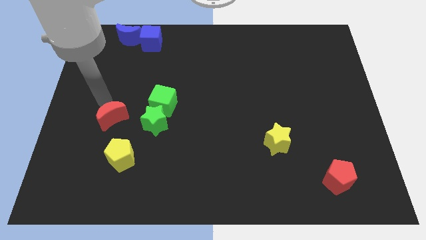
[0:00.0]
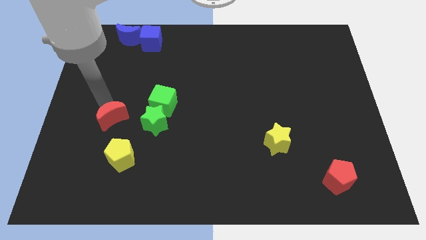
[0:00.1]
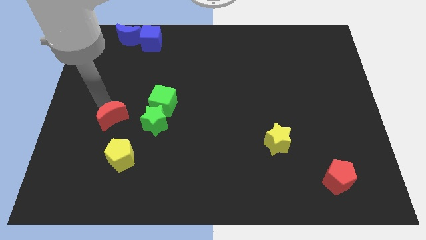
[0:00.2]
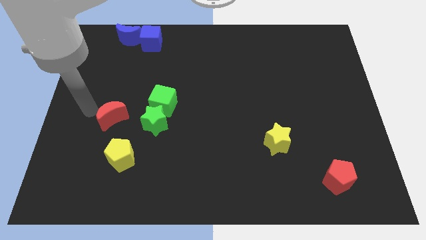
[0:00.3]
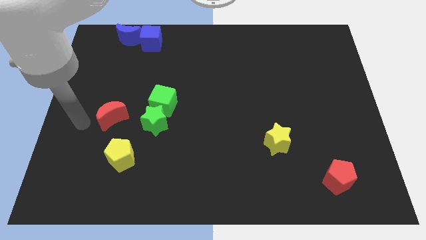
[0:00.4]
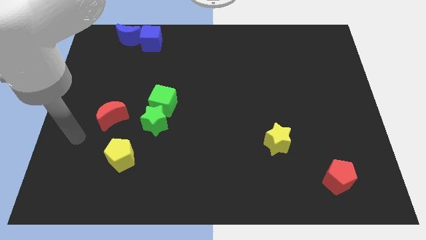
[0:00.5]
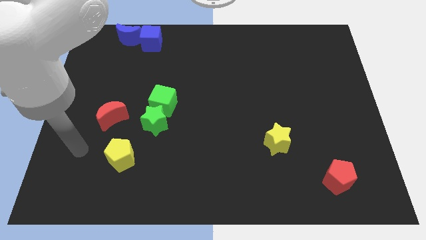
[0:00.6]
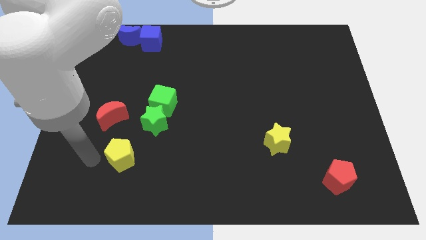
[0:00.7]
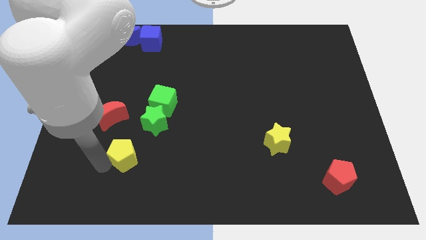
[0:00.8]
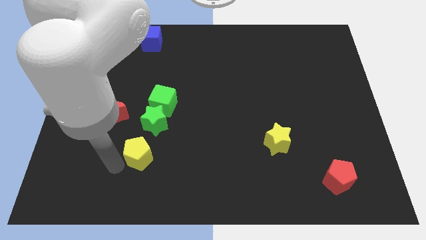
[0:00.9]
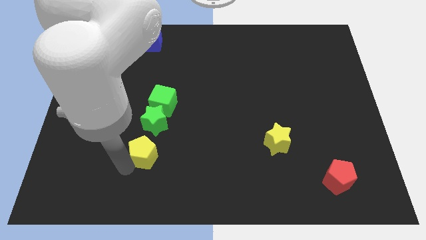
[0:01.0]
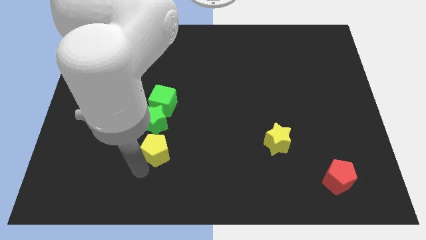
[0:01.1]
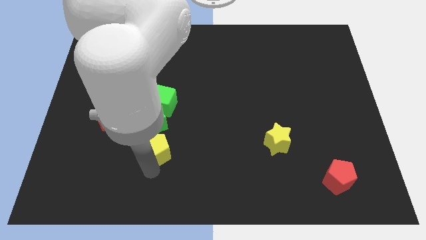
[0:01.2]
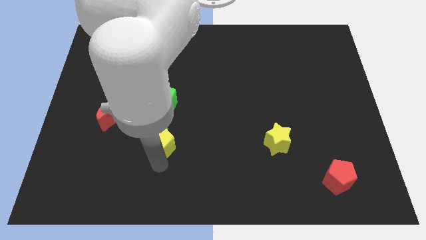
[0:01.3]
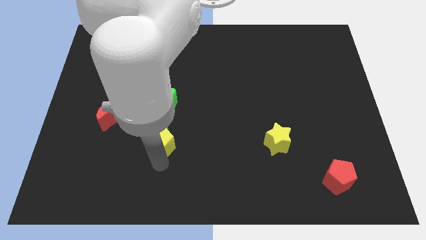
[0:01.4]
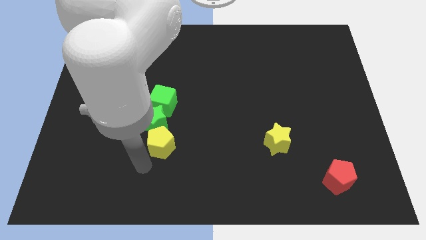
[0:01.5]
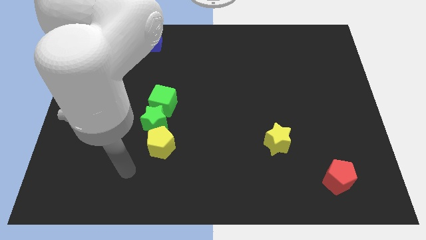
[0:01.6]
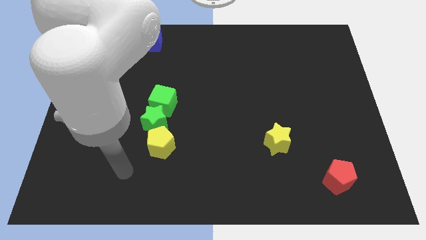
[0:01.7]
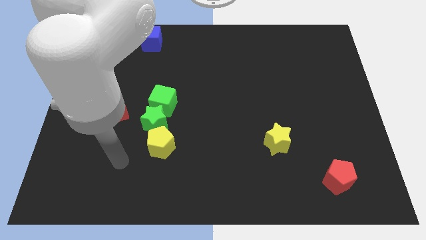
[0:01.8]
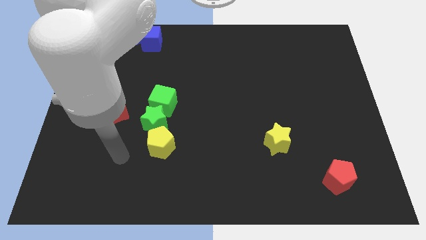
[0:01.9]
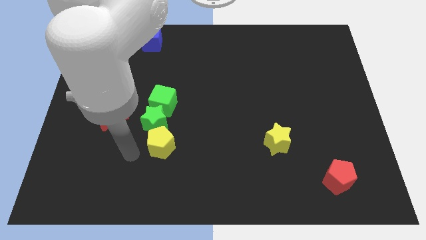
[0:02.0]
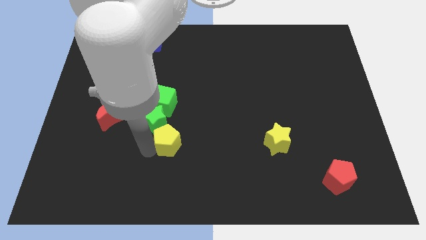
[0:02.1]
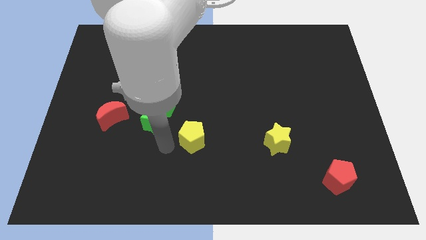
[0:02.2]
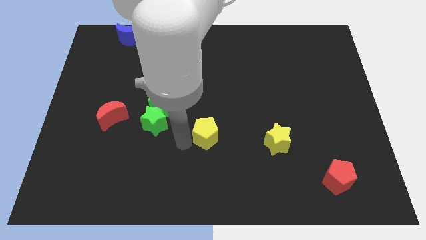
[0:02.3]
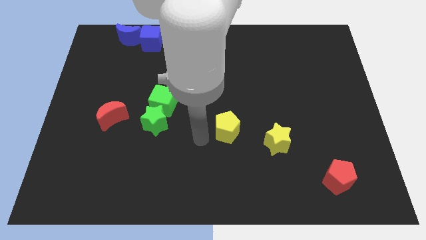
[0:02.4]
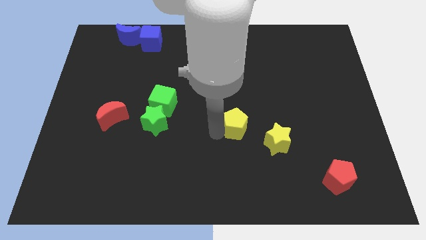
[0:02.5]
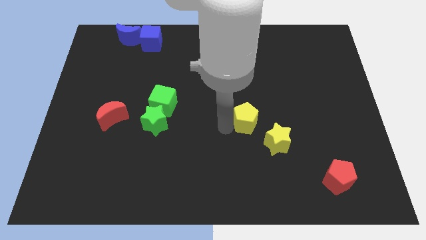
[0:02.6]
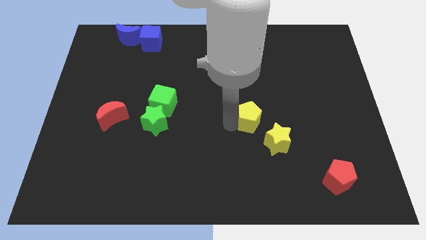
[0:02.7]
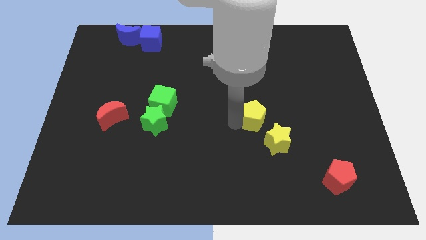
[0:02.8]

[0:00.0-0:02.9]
move the yellow pentagon diagonally to the top left to the yellow star

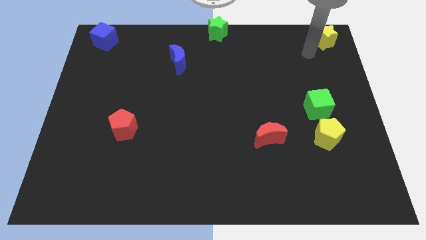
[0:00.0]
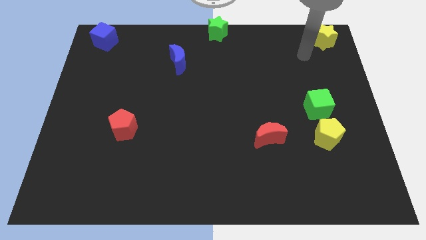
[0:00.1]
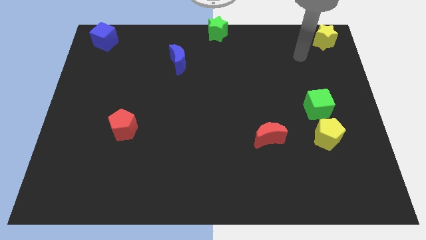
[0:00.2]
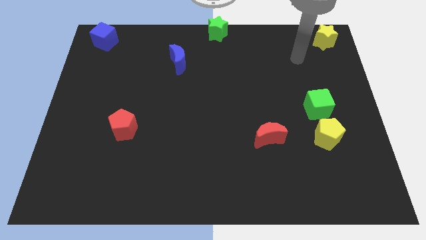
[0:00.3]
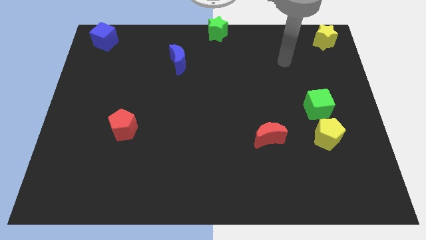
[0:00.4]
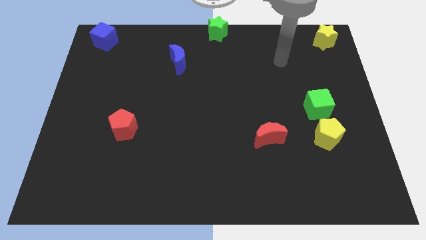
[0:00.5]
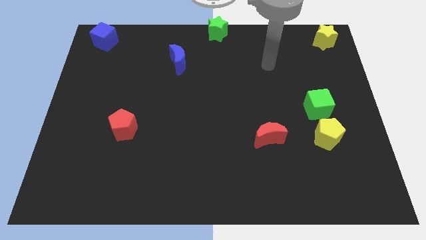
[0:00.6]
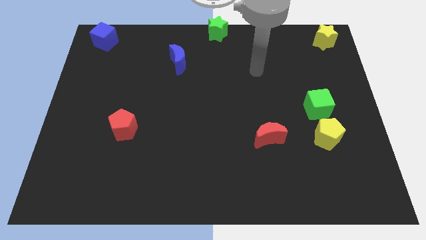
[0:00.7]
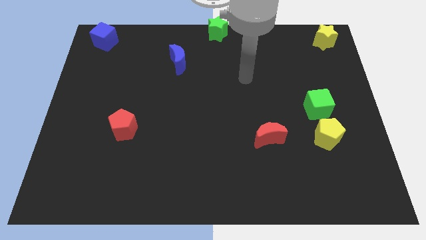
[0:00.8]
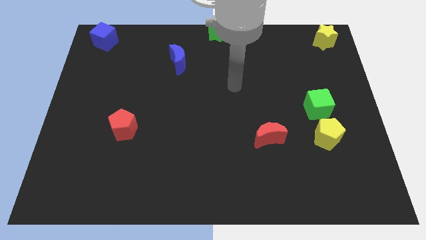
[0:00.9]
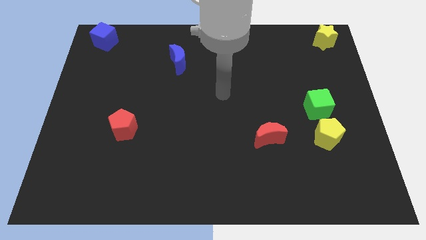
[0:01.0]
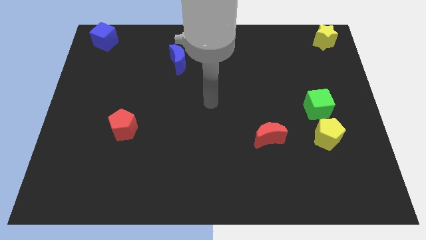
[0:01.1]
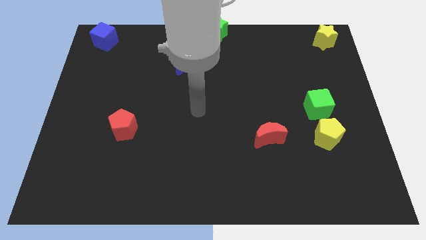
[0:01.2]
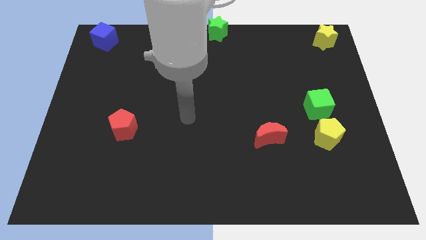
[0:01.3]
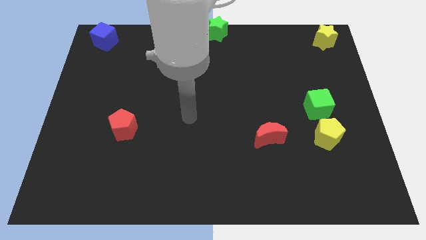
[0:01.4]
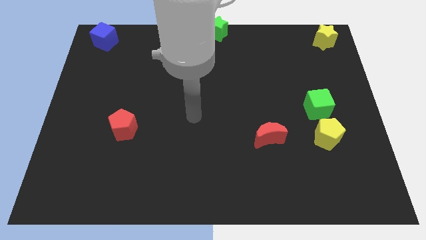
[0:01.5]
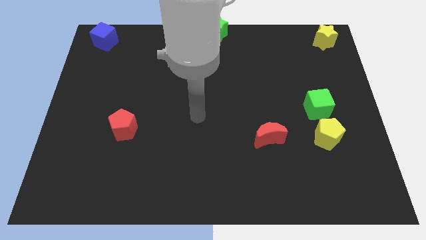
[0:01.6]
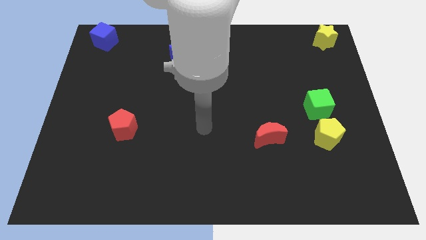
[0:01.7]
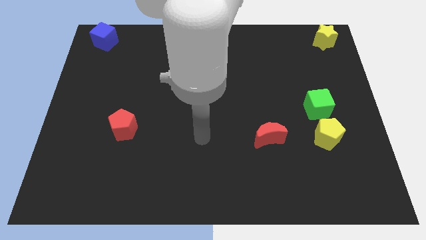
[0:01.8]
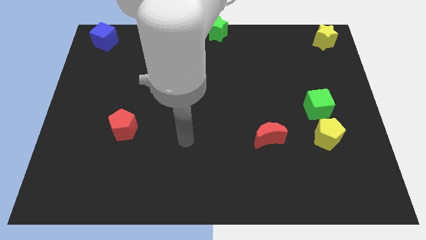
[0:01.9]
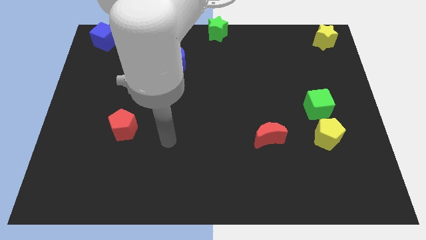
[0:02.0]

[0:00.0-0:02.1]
move away from the yellow star

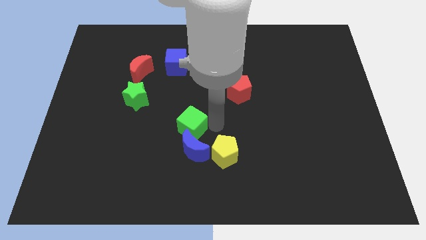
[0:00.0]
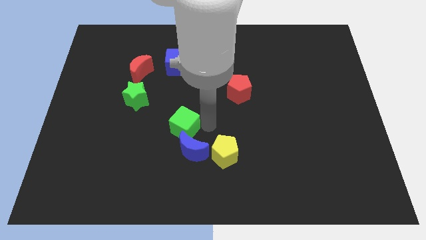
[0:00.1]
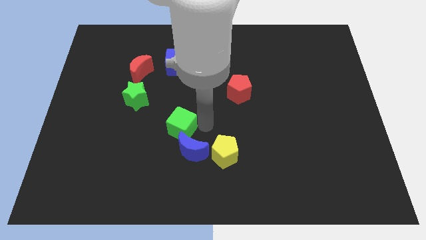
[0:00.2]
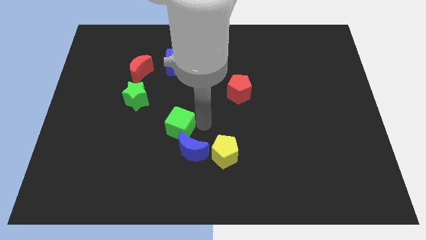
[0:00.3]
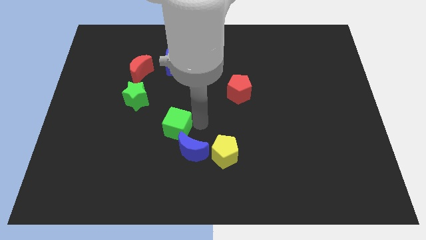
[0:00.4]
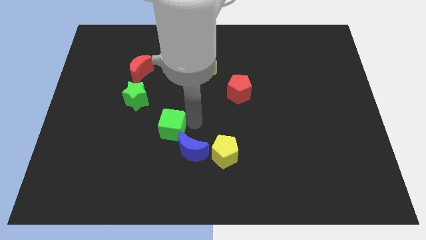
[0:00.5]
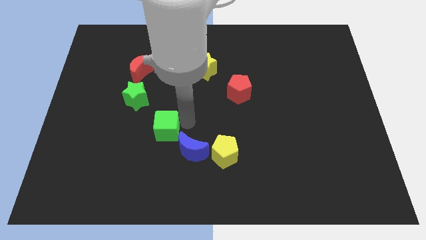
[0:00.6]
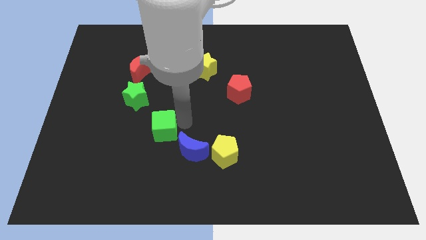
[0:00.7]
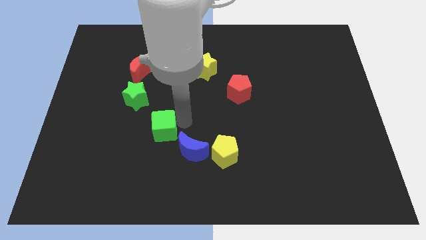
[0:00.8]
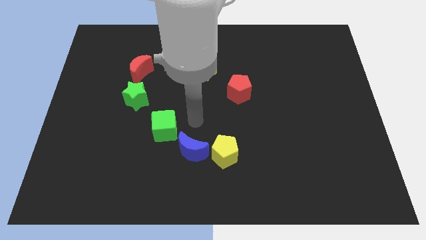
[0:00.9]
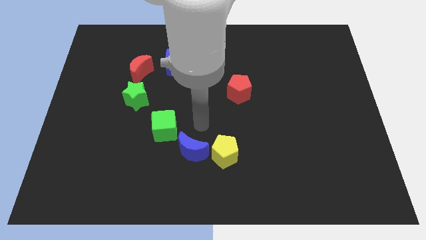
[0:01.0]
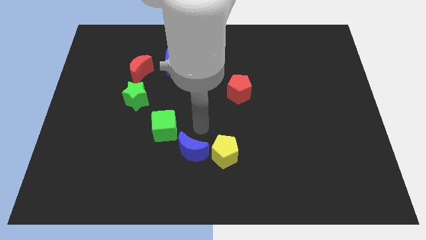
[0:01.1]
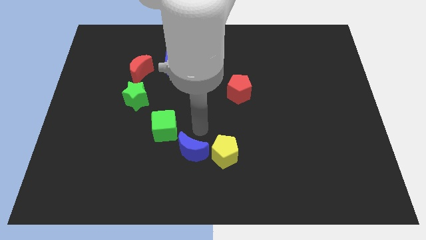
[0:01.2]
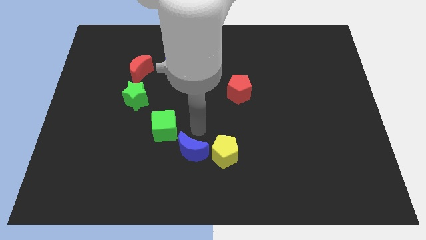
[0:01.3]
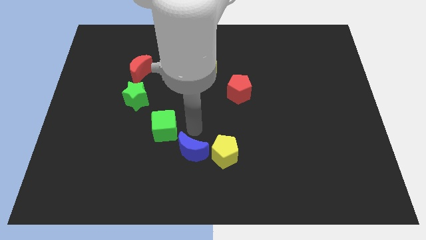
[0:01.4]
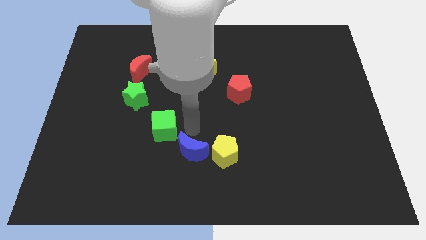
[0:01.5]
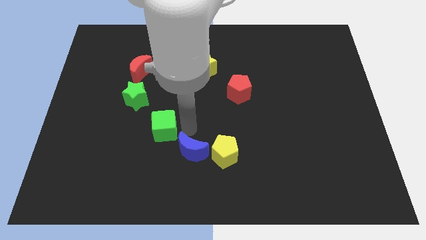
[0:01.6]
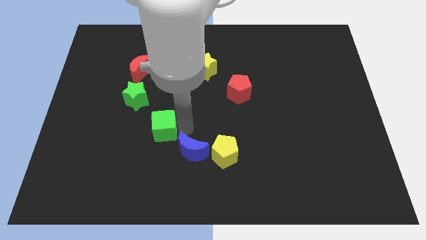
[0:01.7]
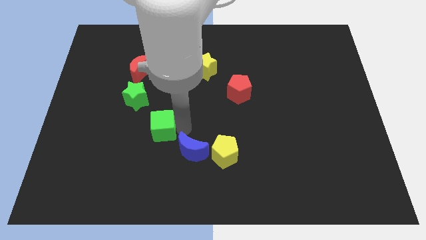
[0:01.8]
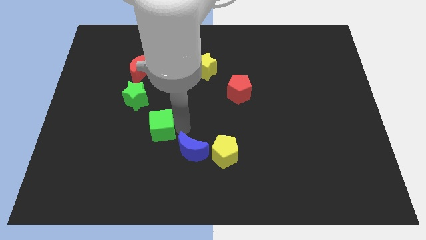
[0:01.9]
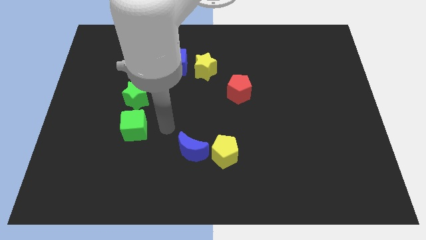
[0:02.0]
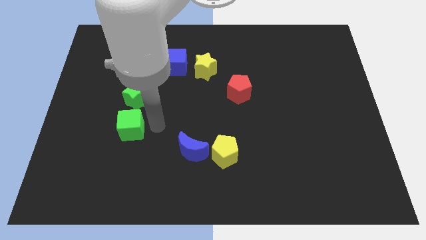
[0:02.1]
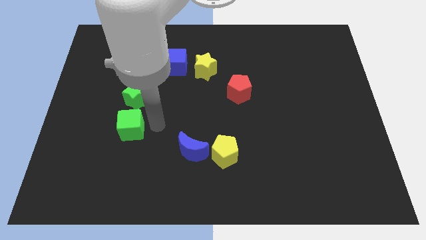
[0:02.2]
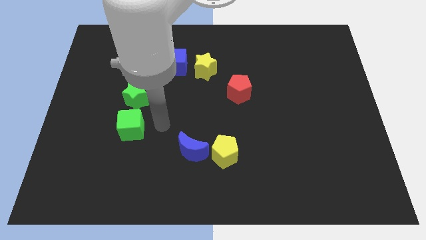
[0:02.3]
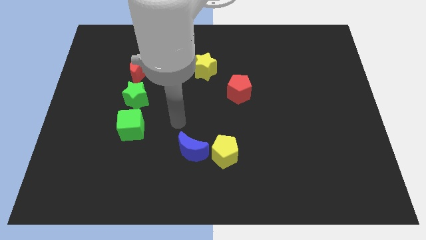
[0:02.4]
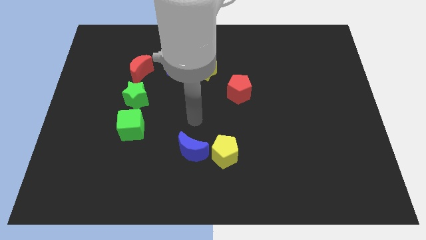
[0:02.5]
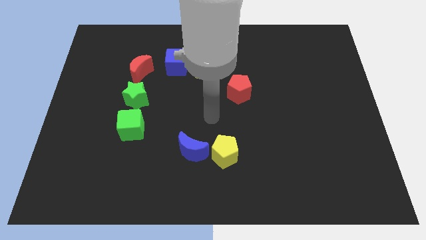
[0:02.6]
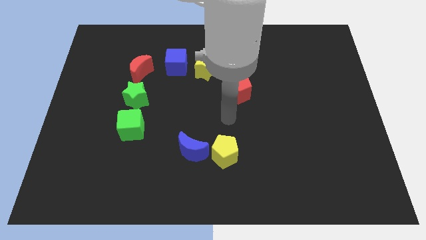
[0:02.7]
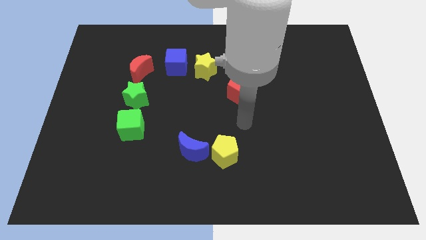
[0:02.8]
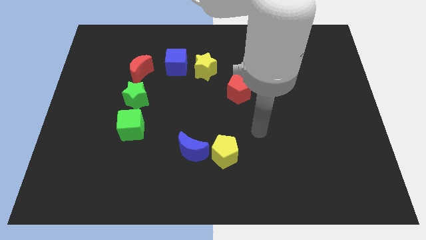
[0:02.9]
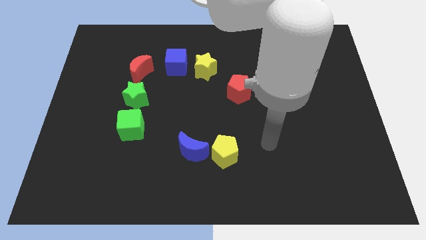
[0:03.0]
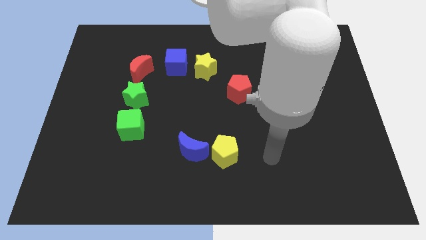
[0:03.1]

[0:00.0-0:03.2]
place the green cube vertically below to the green star

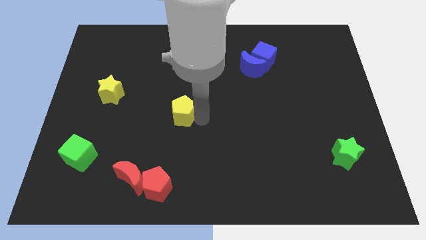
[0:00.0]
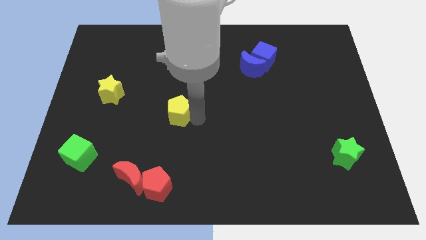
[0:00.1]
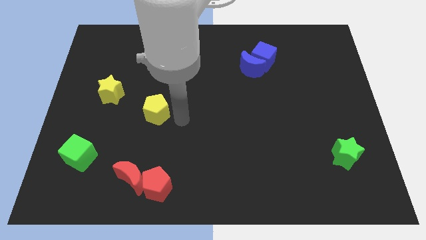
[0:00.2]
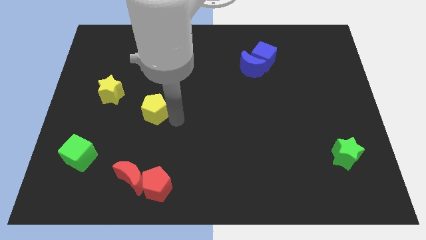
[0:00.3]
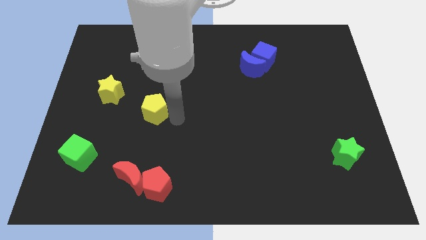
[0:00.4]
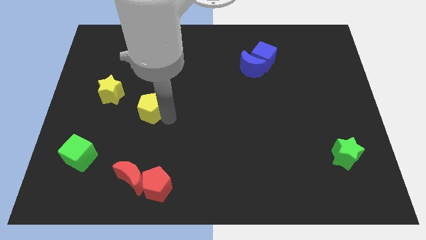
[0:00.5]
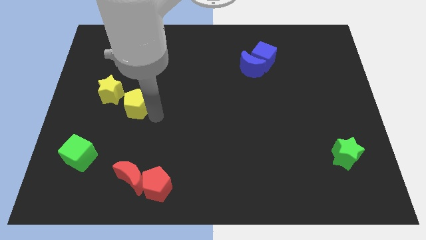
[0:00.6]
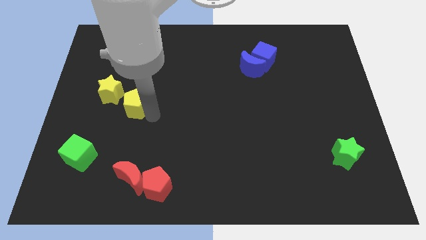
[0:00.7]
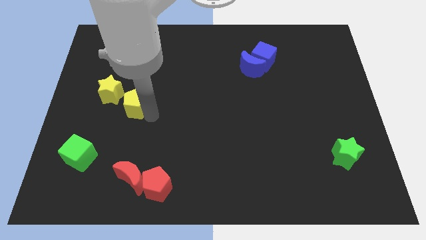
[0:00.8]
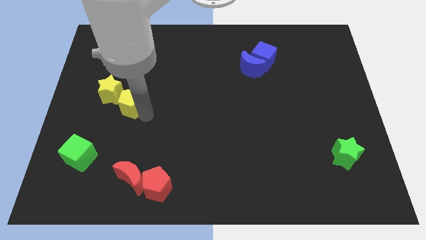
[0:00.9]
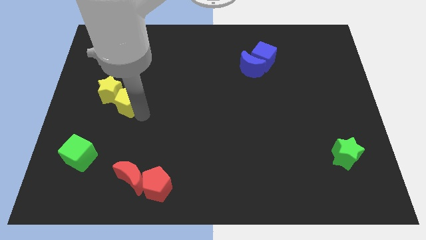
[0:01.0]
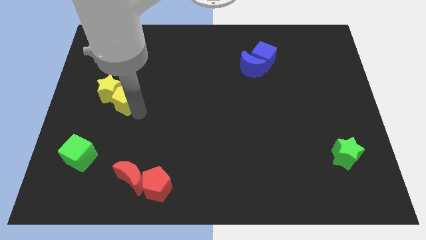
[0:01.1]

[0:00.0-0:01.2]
move the yellow pentagon into the yellow star
